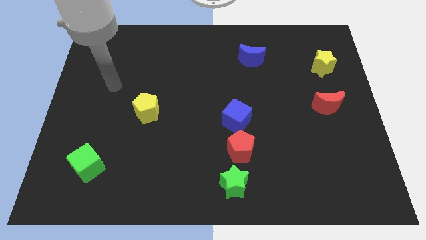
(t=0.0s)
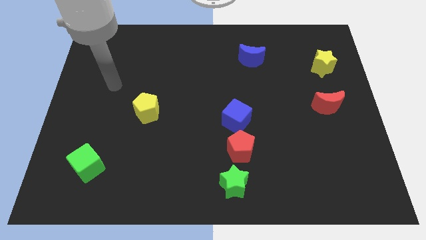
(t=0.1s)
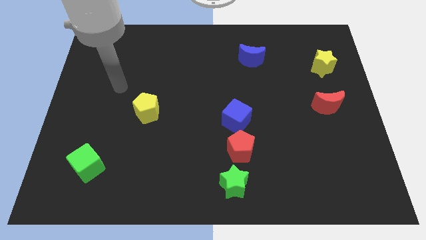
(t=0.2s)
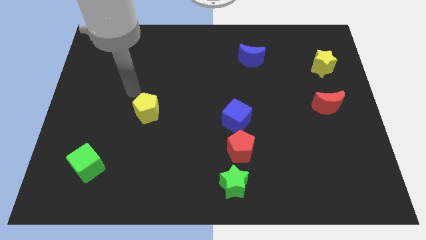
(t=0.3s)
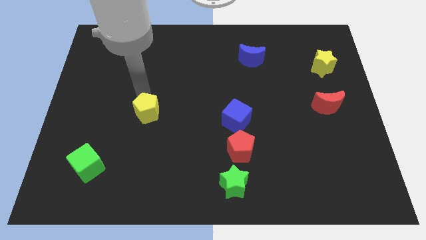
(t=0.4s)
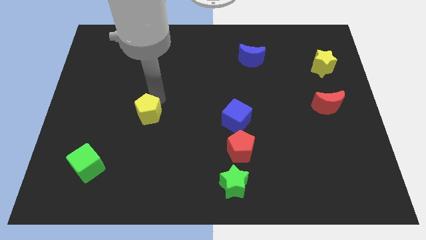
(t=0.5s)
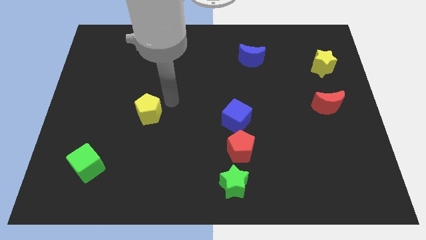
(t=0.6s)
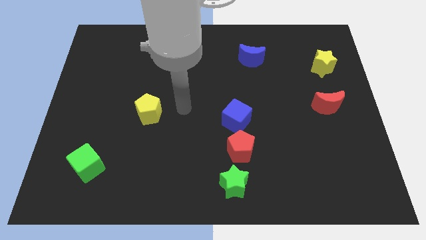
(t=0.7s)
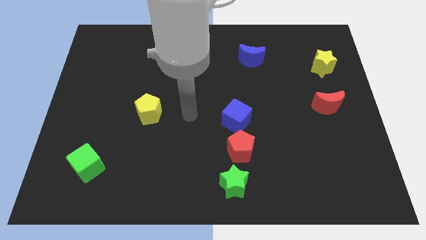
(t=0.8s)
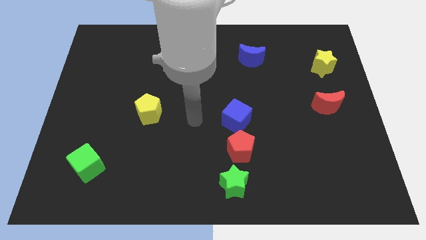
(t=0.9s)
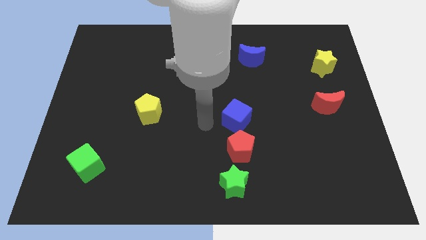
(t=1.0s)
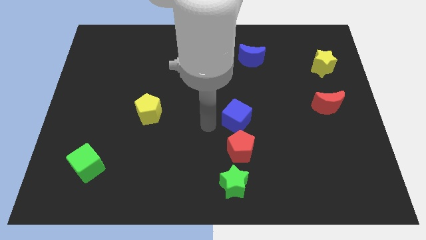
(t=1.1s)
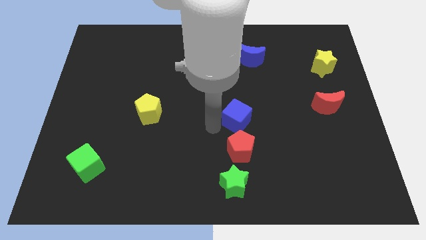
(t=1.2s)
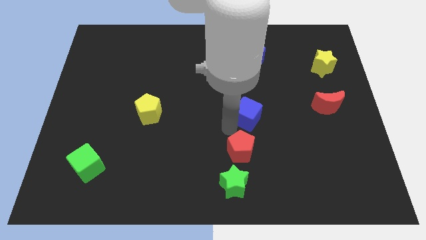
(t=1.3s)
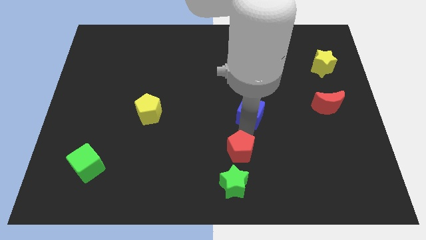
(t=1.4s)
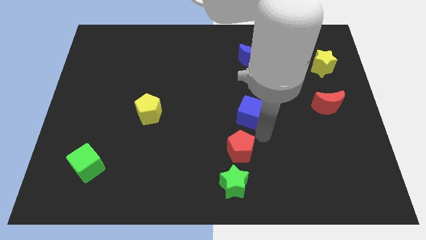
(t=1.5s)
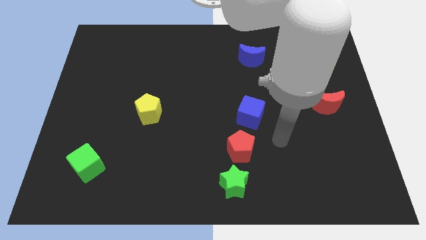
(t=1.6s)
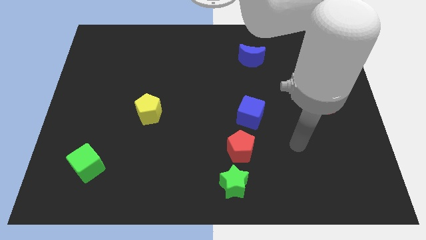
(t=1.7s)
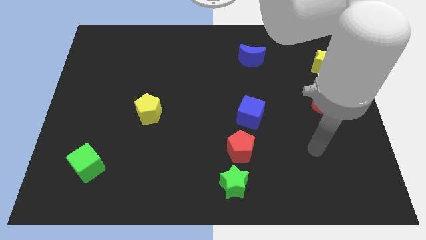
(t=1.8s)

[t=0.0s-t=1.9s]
slightly touch the yellow pentagon and blue cube

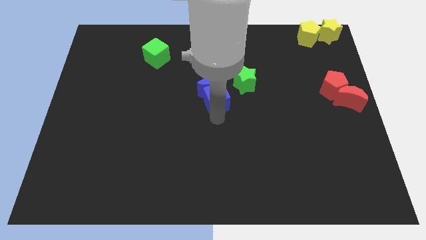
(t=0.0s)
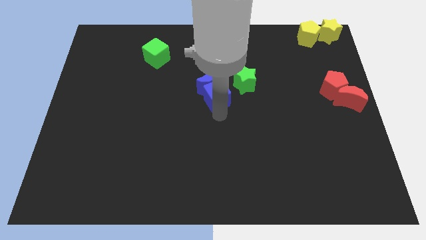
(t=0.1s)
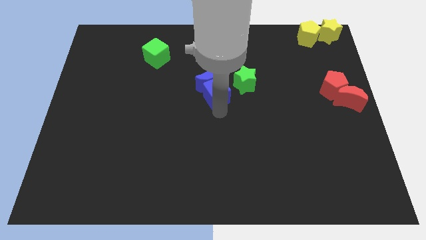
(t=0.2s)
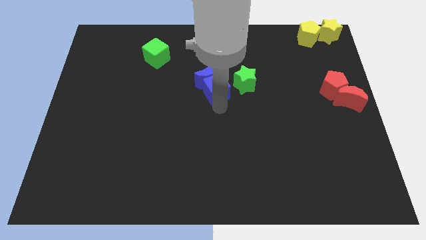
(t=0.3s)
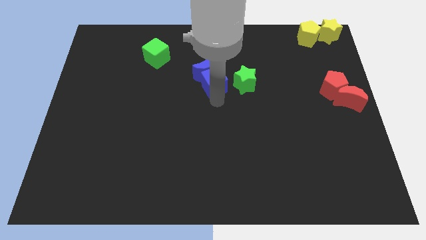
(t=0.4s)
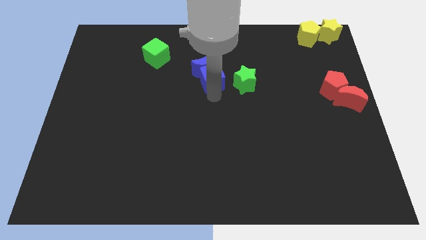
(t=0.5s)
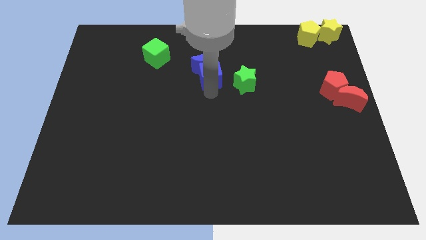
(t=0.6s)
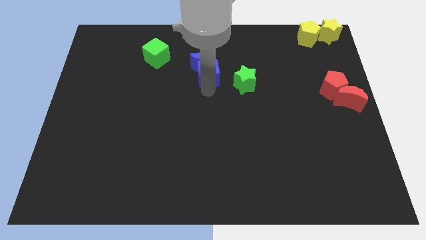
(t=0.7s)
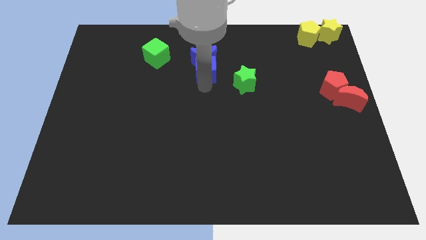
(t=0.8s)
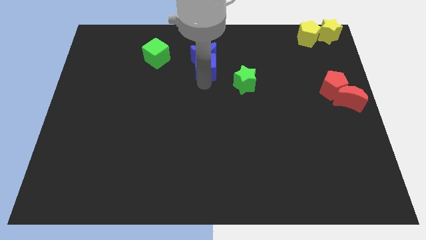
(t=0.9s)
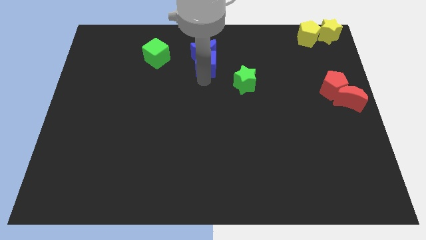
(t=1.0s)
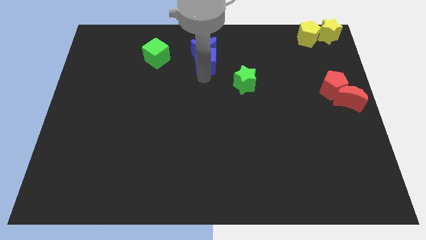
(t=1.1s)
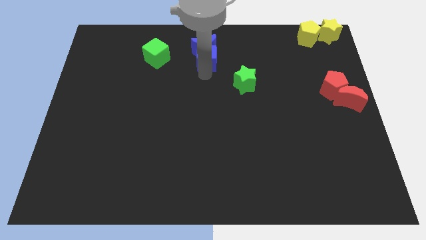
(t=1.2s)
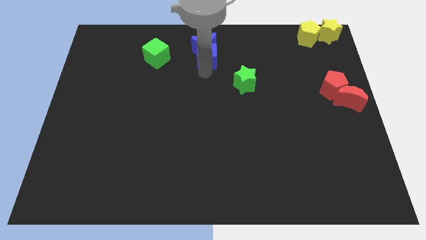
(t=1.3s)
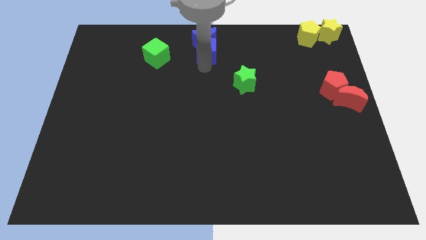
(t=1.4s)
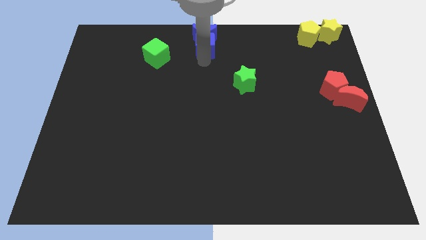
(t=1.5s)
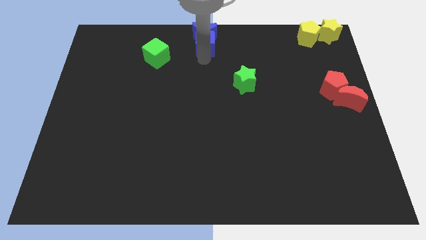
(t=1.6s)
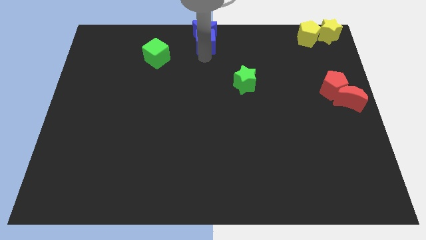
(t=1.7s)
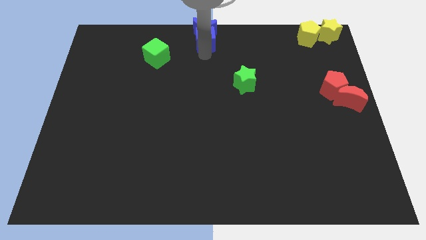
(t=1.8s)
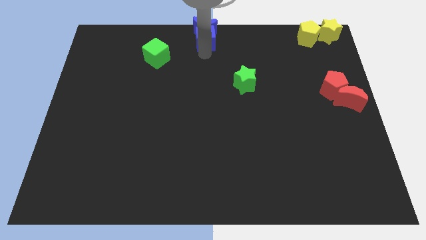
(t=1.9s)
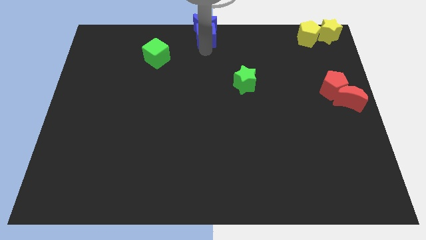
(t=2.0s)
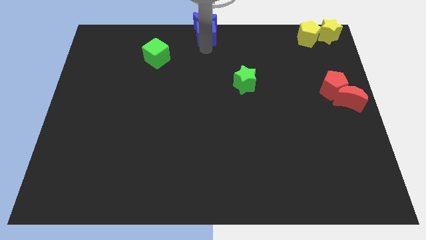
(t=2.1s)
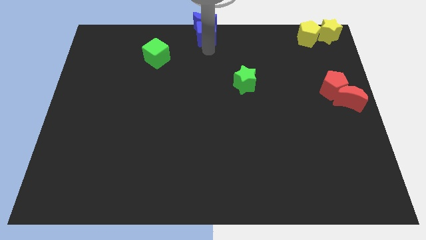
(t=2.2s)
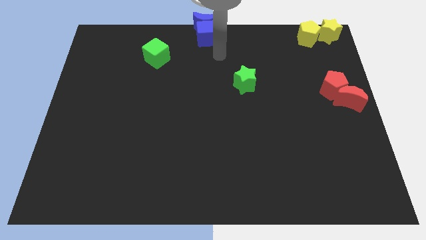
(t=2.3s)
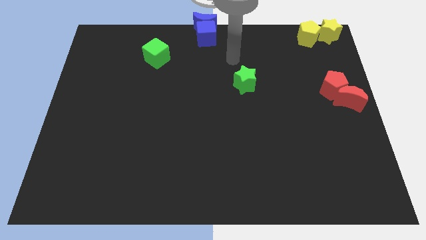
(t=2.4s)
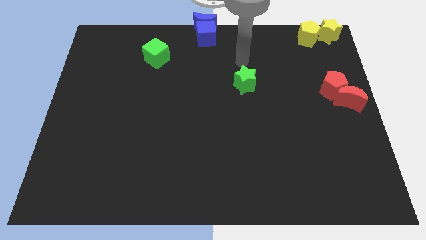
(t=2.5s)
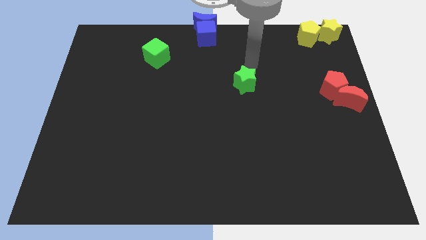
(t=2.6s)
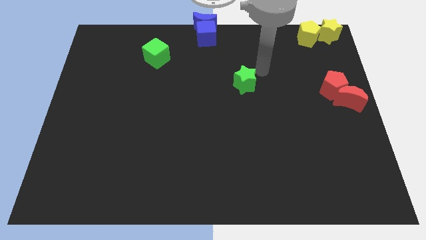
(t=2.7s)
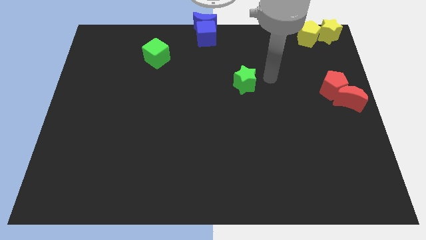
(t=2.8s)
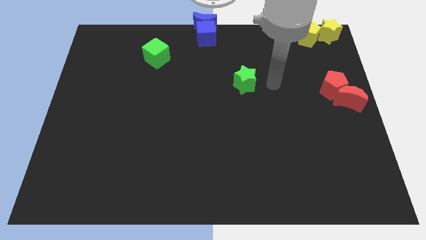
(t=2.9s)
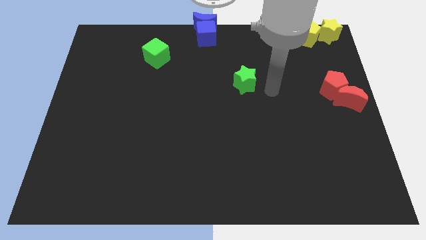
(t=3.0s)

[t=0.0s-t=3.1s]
drag the blue cube and blue crescent to center top of the board

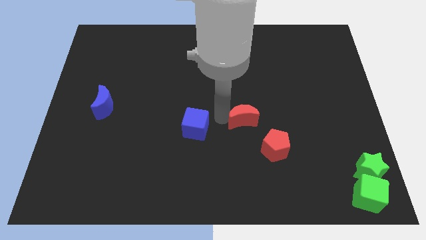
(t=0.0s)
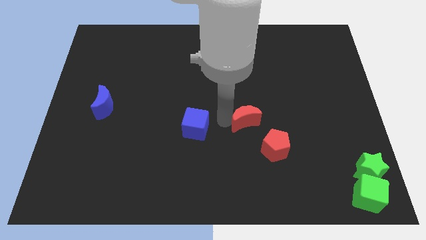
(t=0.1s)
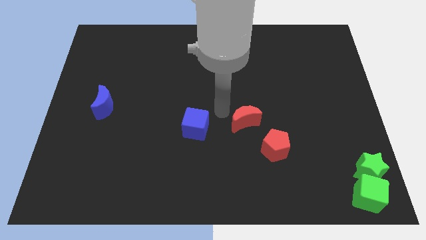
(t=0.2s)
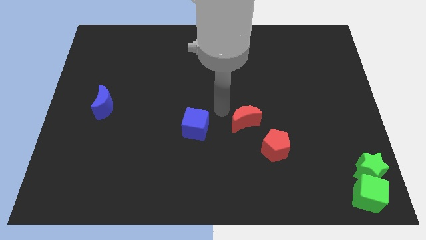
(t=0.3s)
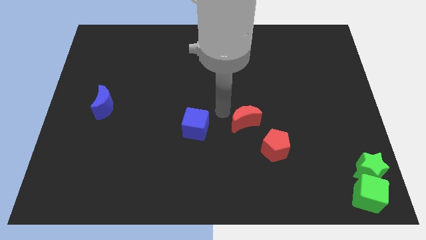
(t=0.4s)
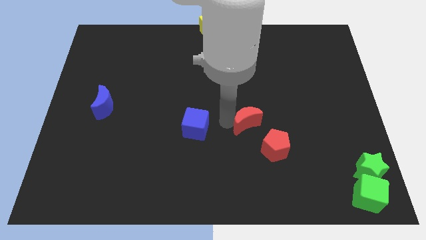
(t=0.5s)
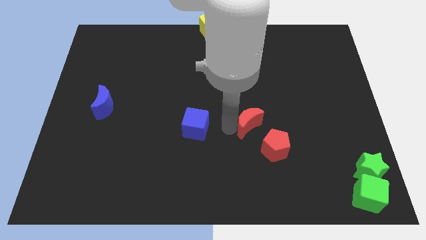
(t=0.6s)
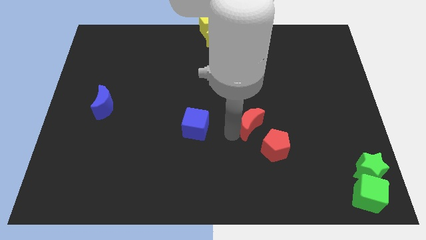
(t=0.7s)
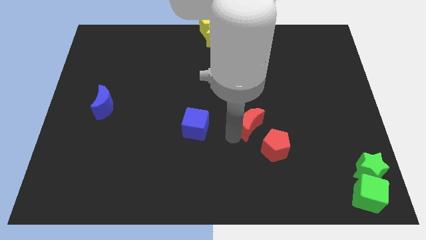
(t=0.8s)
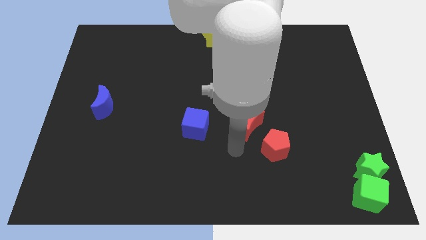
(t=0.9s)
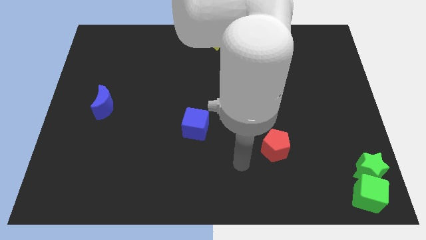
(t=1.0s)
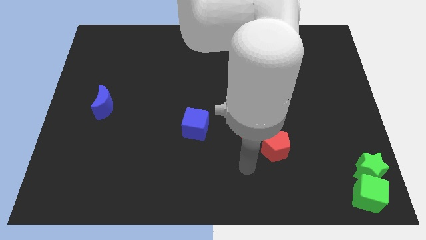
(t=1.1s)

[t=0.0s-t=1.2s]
move red moon diagonally above to the red pentagon

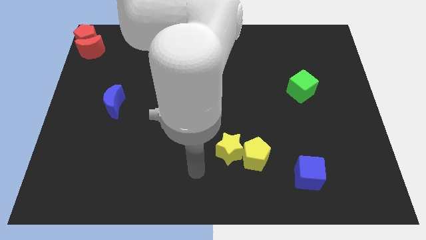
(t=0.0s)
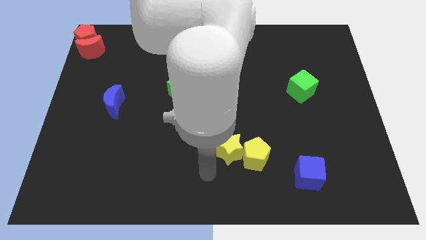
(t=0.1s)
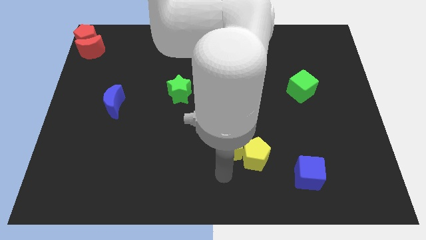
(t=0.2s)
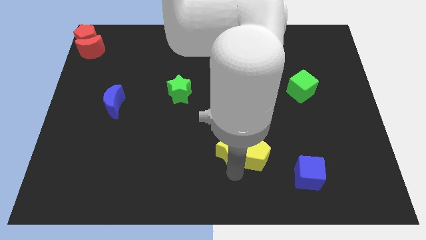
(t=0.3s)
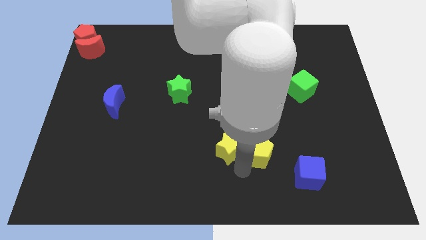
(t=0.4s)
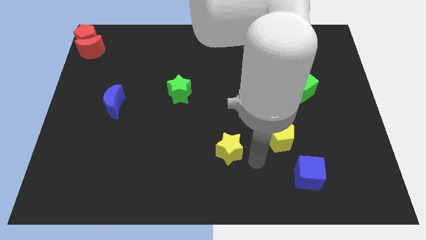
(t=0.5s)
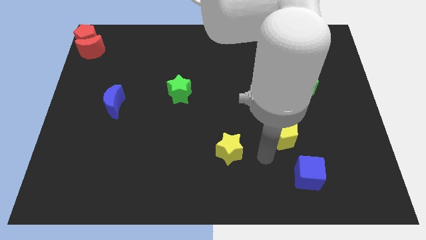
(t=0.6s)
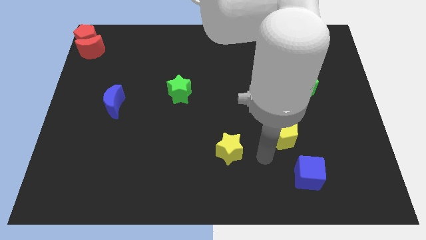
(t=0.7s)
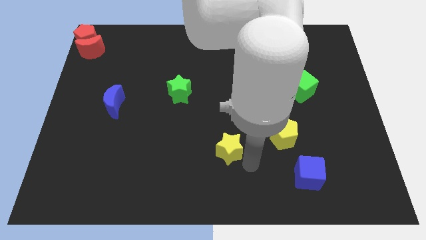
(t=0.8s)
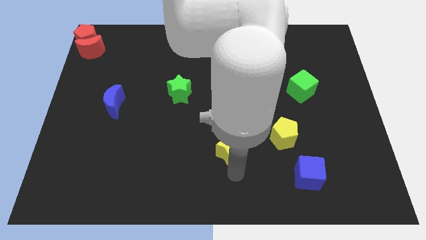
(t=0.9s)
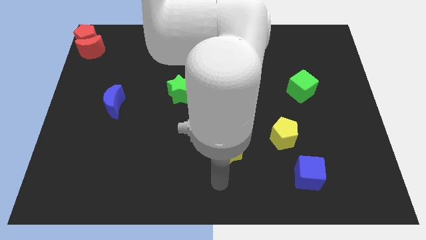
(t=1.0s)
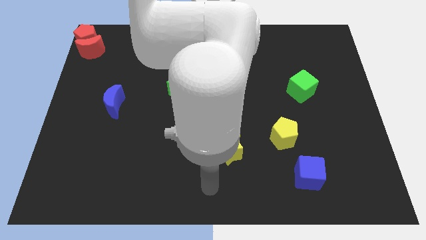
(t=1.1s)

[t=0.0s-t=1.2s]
move the yellow pentagon away from the yellow star

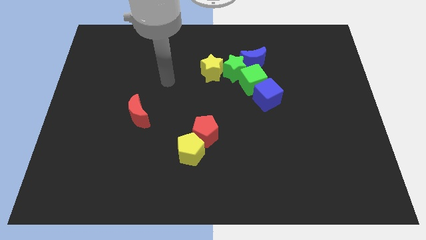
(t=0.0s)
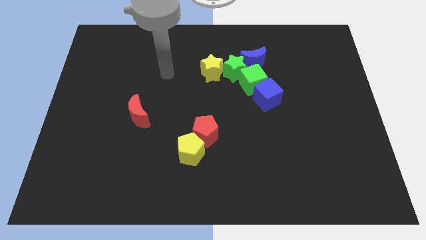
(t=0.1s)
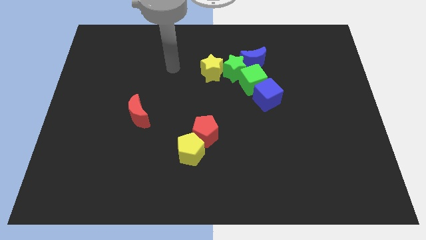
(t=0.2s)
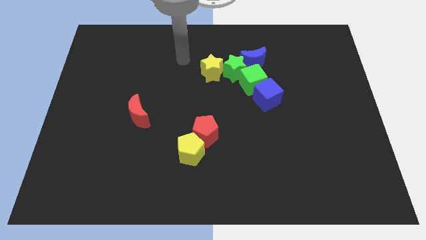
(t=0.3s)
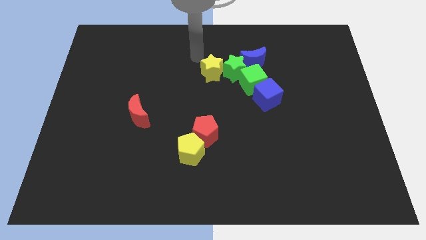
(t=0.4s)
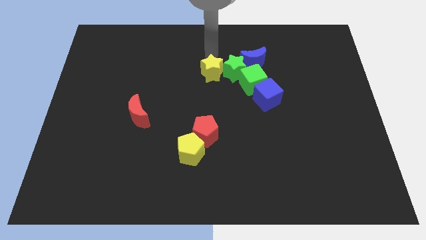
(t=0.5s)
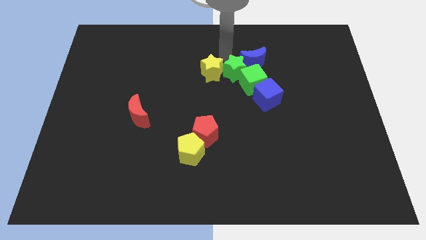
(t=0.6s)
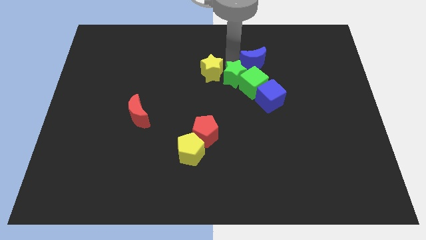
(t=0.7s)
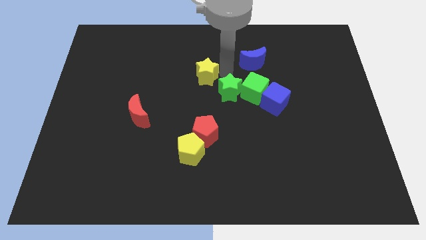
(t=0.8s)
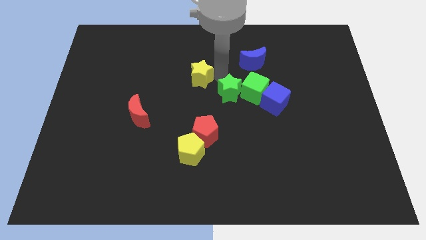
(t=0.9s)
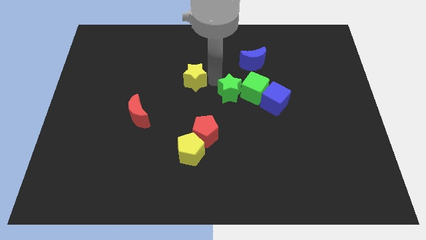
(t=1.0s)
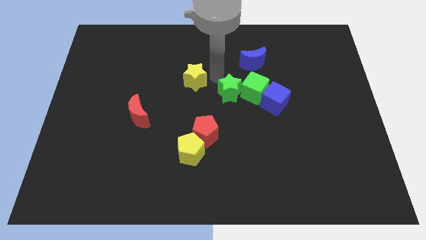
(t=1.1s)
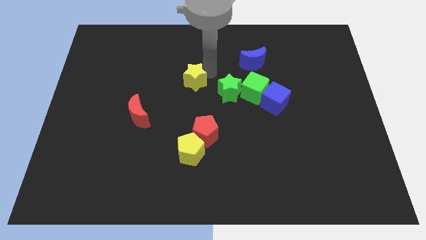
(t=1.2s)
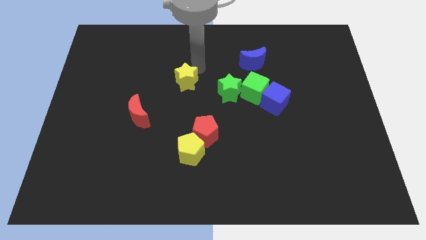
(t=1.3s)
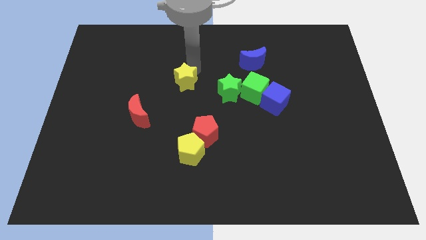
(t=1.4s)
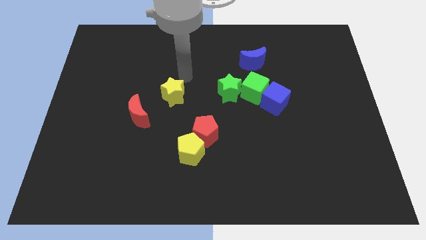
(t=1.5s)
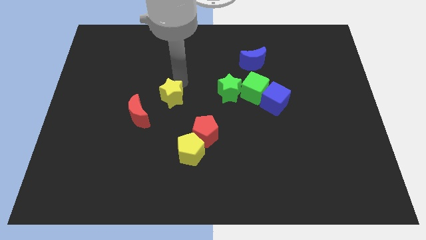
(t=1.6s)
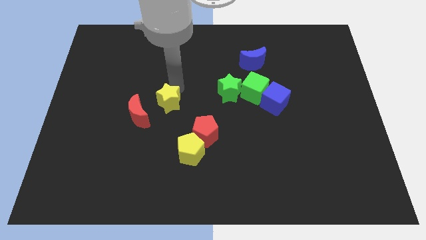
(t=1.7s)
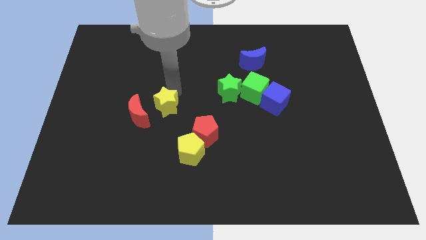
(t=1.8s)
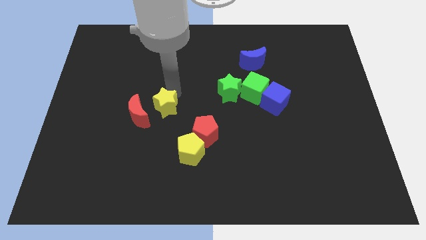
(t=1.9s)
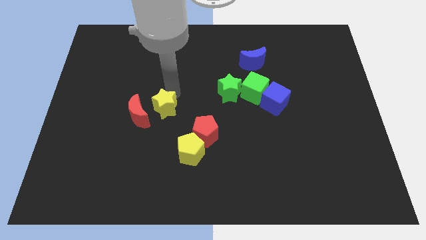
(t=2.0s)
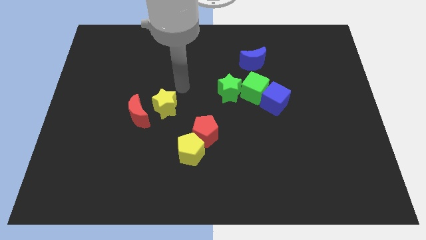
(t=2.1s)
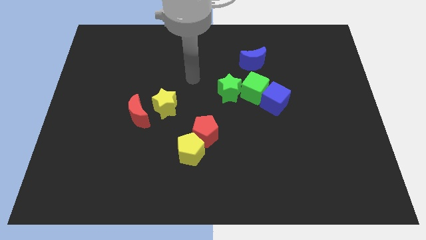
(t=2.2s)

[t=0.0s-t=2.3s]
separate yellow star from green star
